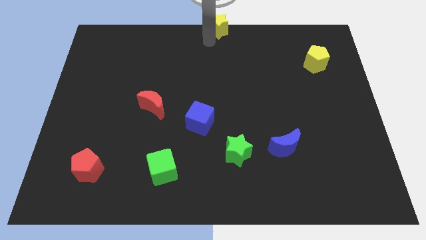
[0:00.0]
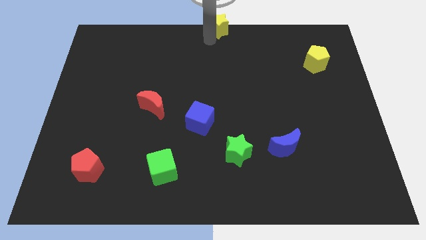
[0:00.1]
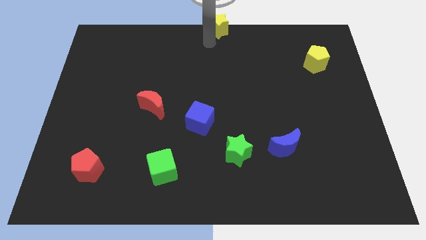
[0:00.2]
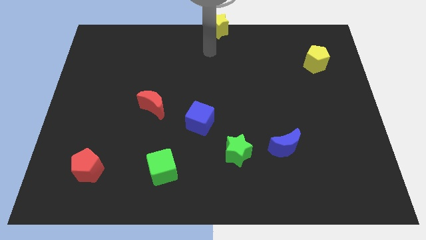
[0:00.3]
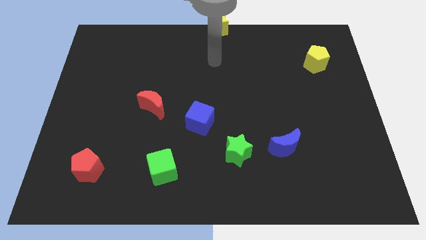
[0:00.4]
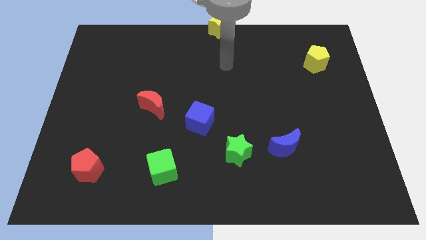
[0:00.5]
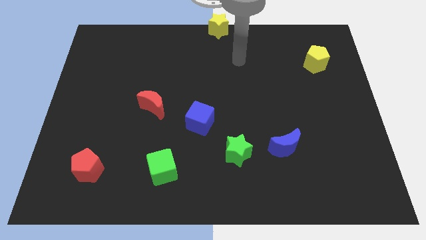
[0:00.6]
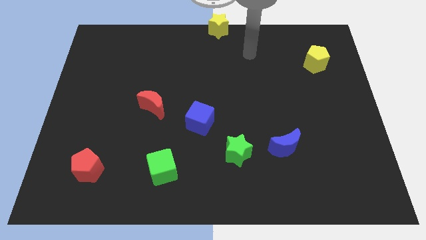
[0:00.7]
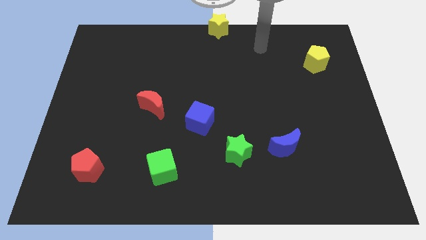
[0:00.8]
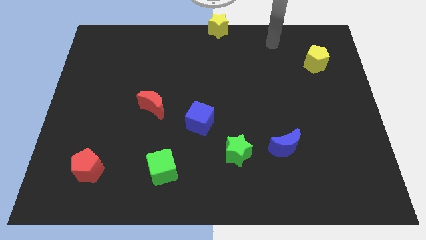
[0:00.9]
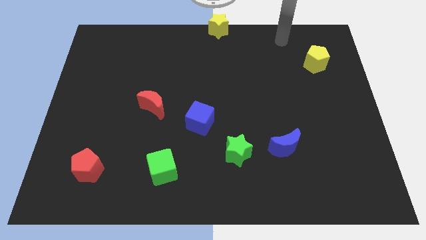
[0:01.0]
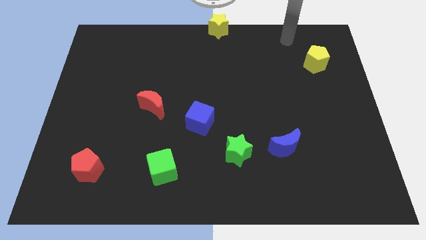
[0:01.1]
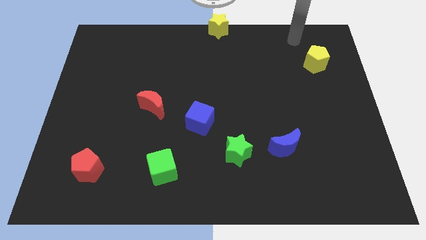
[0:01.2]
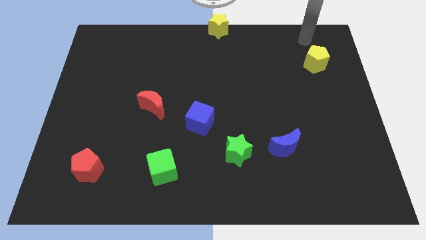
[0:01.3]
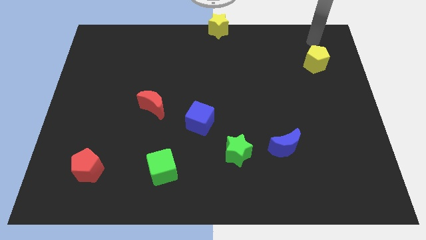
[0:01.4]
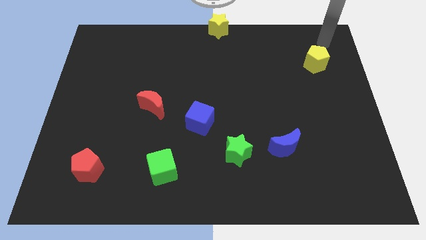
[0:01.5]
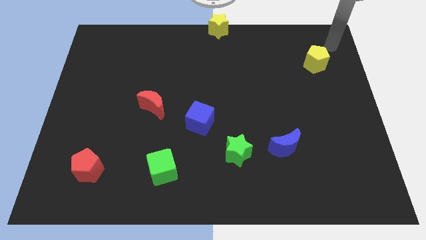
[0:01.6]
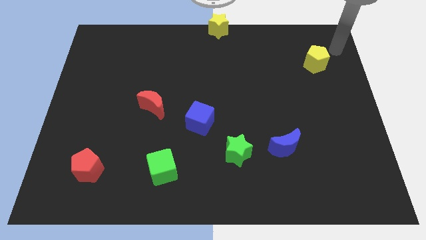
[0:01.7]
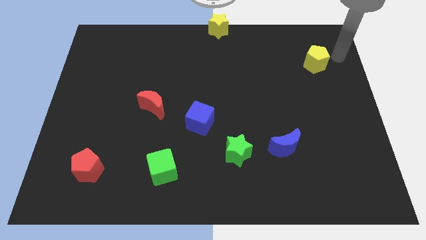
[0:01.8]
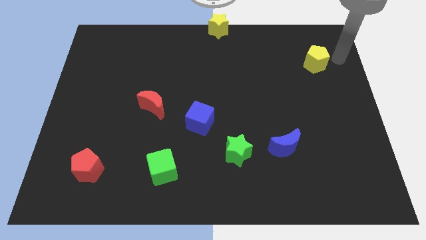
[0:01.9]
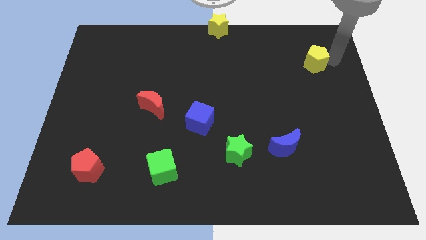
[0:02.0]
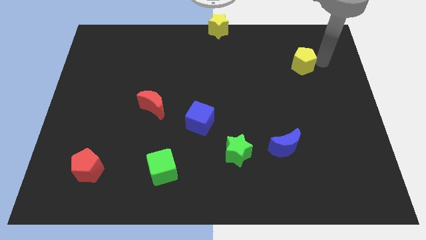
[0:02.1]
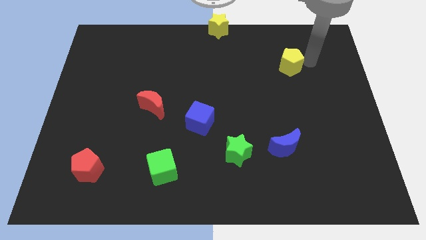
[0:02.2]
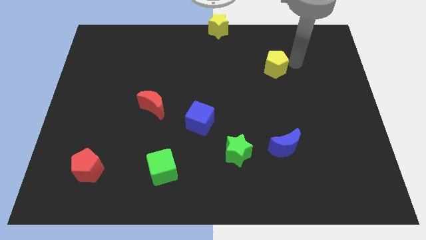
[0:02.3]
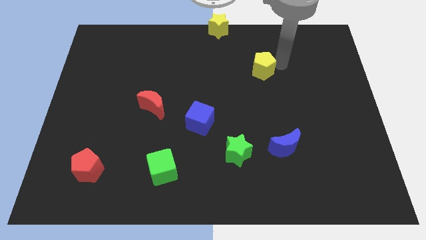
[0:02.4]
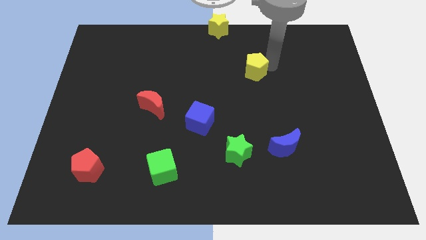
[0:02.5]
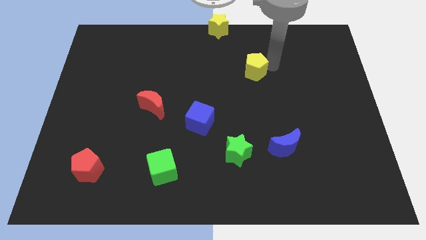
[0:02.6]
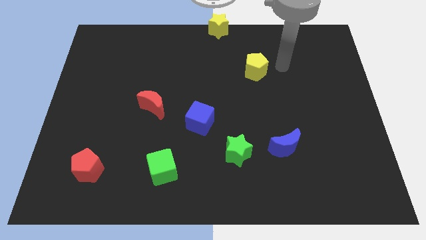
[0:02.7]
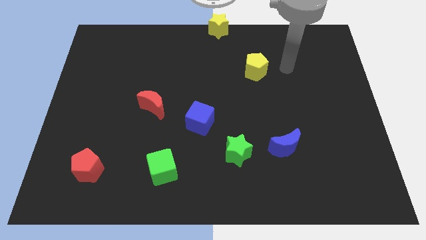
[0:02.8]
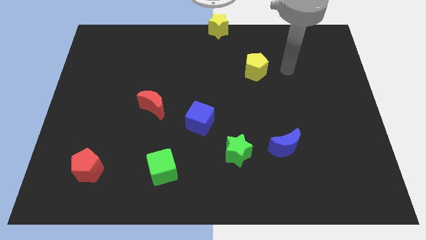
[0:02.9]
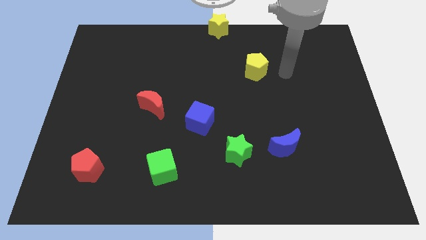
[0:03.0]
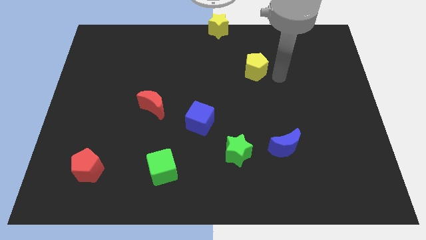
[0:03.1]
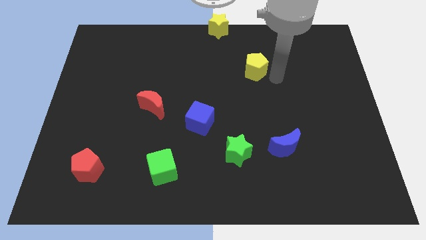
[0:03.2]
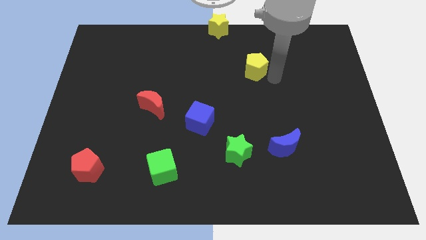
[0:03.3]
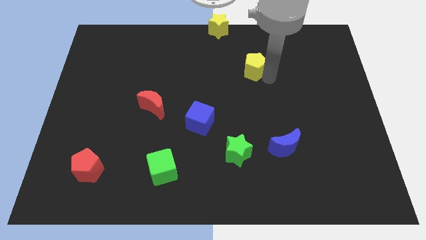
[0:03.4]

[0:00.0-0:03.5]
push the yellow pentagon to the left

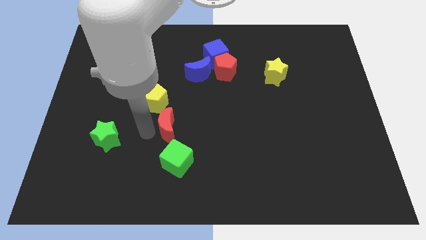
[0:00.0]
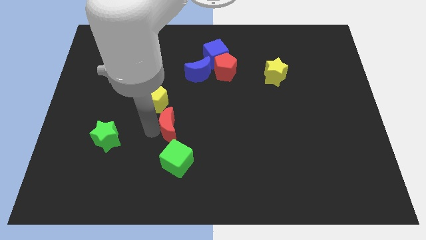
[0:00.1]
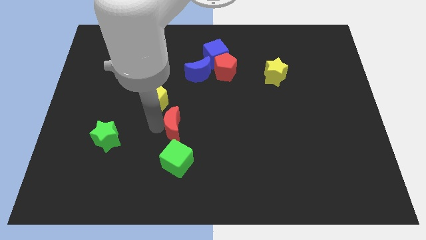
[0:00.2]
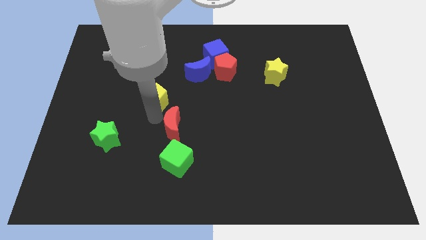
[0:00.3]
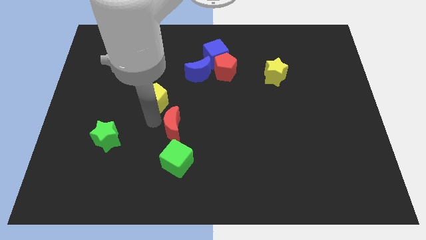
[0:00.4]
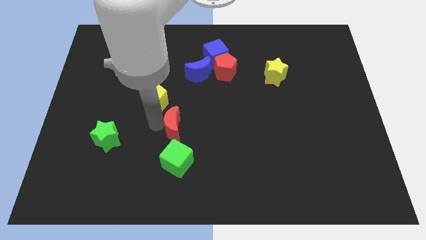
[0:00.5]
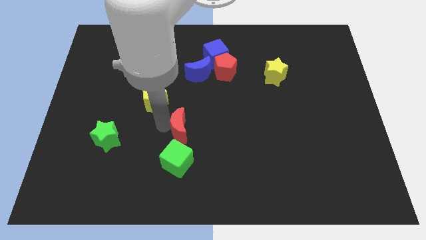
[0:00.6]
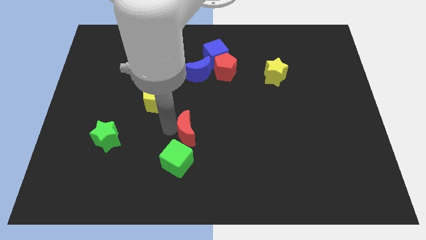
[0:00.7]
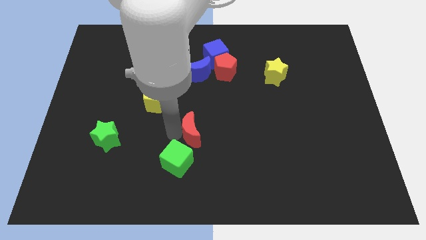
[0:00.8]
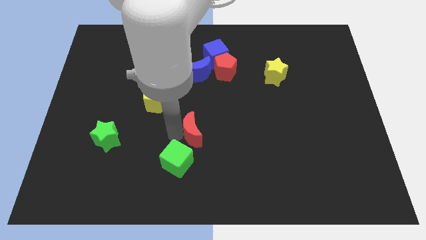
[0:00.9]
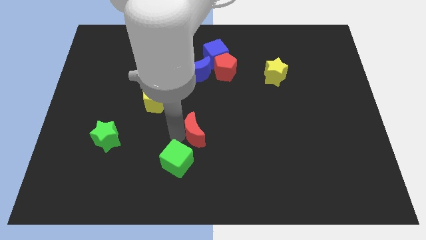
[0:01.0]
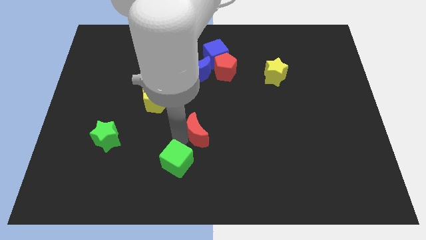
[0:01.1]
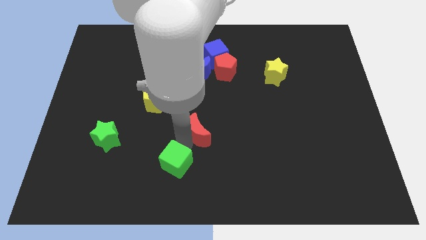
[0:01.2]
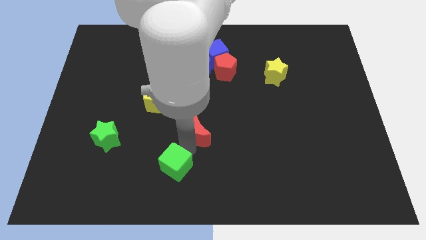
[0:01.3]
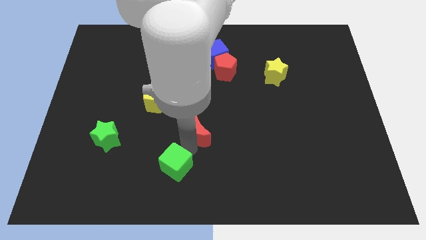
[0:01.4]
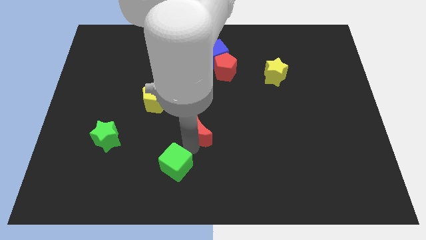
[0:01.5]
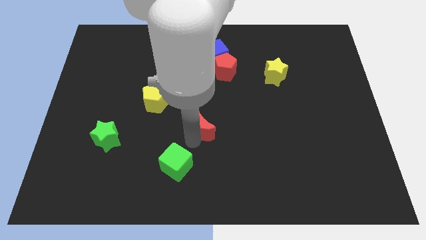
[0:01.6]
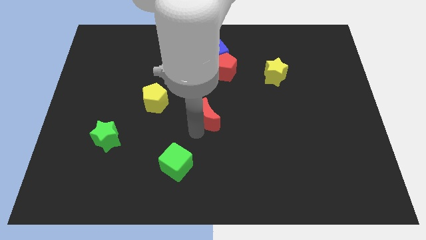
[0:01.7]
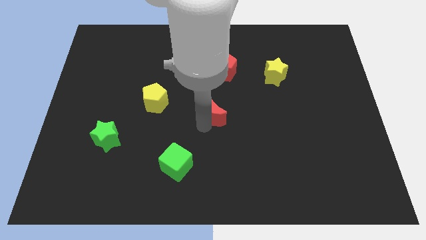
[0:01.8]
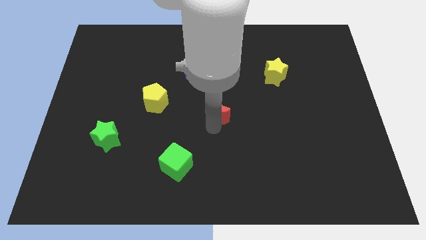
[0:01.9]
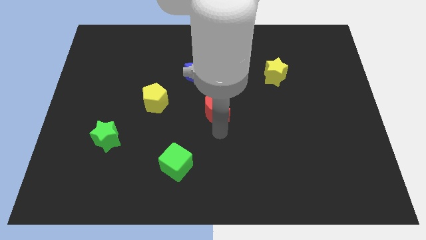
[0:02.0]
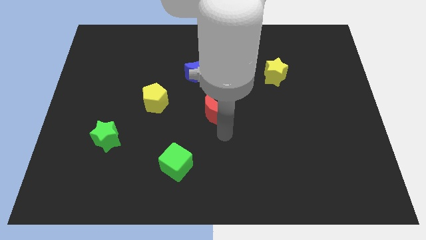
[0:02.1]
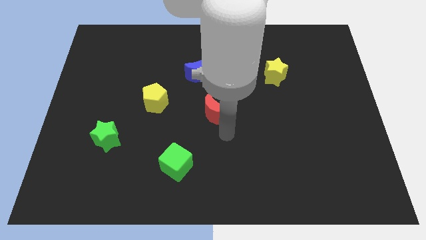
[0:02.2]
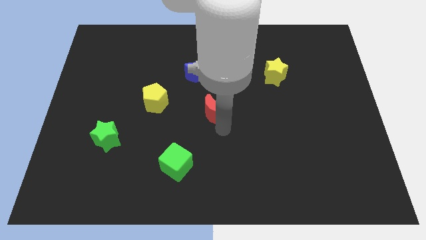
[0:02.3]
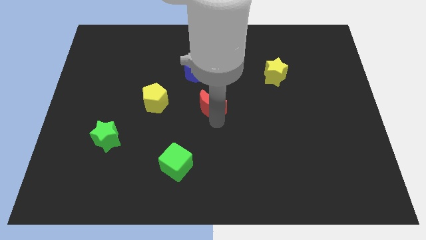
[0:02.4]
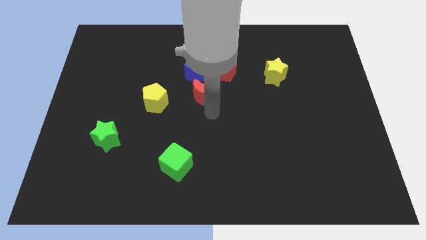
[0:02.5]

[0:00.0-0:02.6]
move the red crescent below the group of blocks

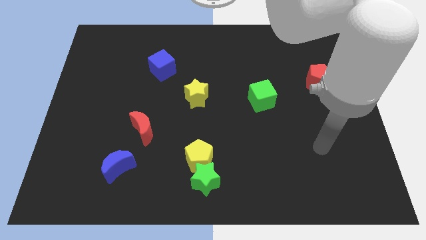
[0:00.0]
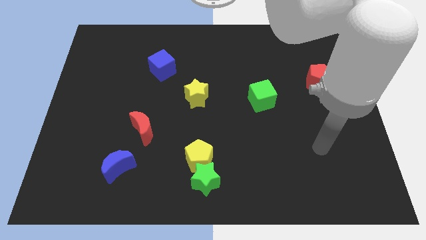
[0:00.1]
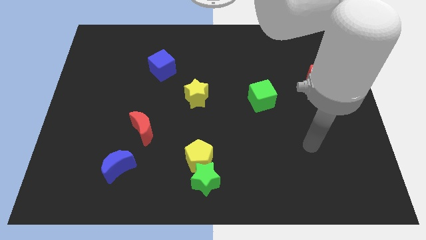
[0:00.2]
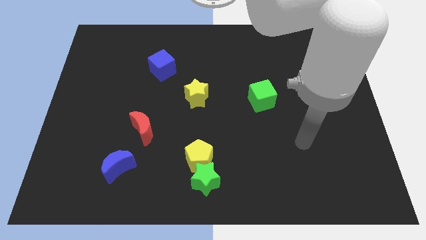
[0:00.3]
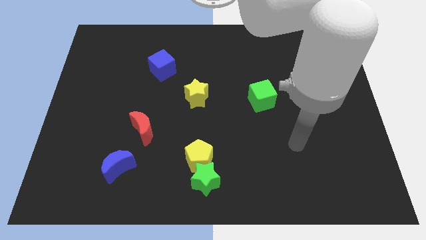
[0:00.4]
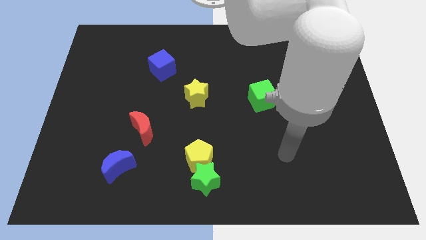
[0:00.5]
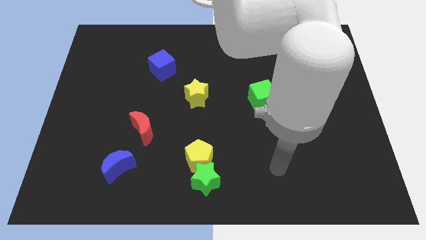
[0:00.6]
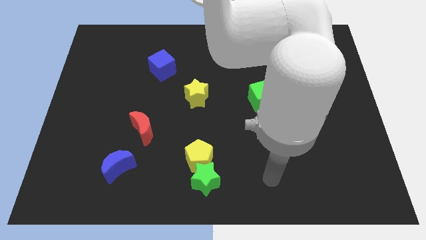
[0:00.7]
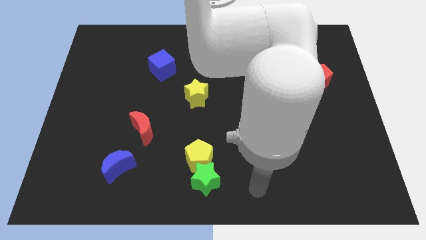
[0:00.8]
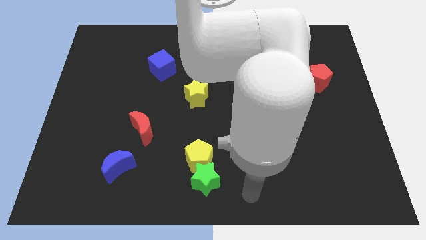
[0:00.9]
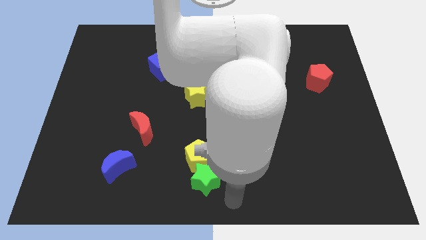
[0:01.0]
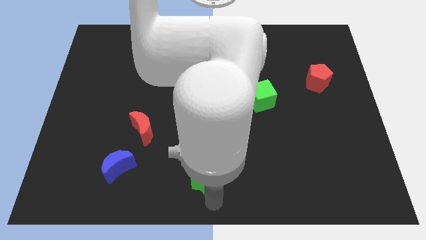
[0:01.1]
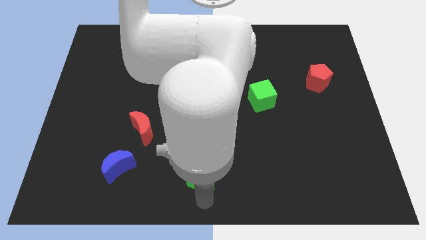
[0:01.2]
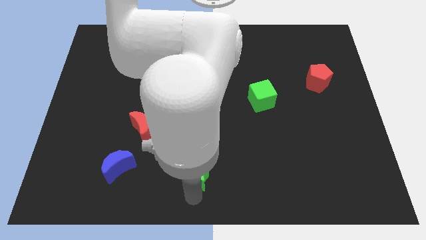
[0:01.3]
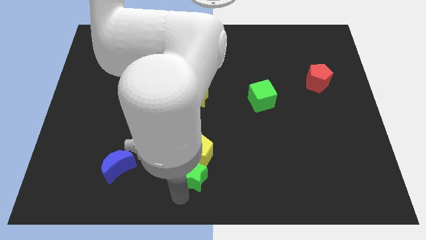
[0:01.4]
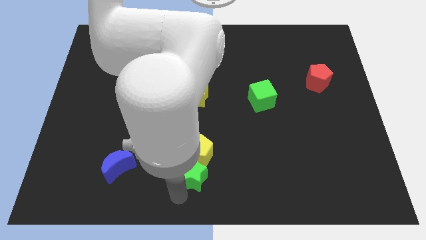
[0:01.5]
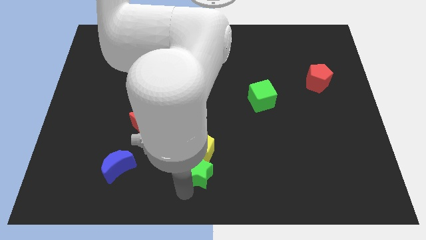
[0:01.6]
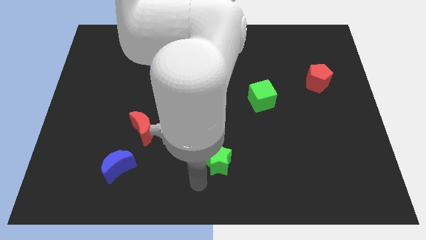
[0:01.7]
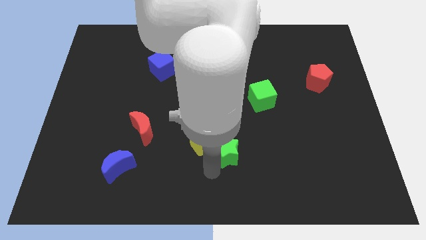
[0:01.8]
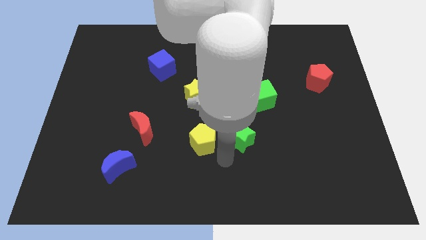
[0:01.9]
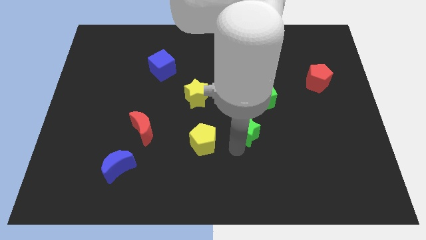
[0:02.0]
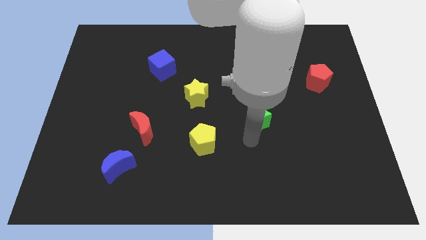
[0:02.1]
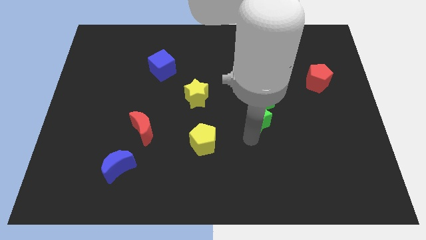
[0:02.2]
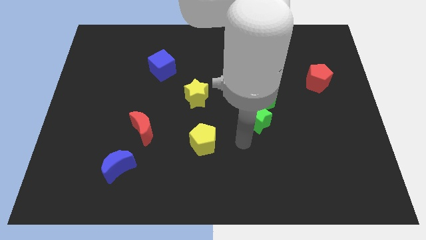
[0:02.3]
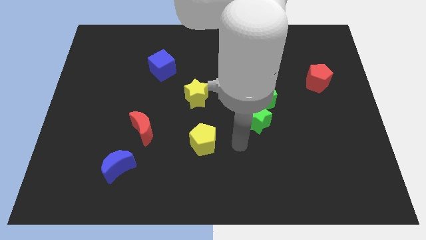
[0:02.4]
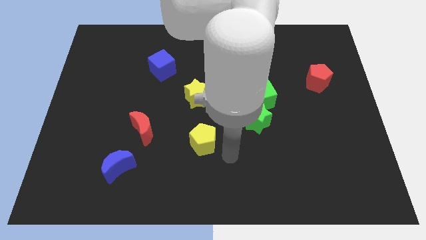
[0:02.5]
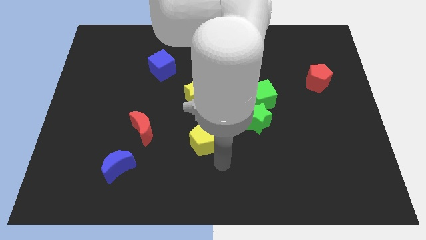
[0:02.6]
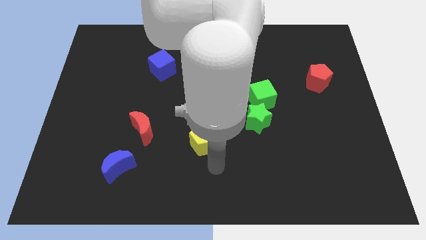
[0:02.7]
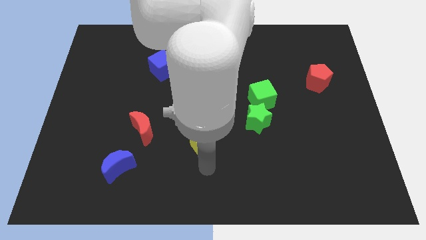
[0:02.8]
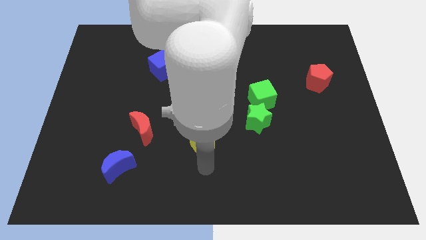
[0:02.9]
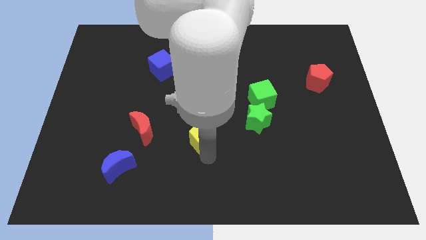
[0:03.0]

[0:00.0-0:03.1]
move the green star into the green cube
